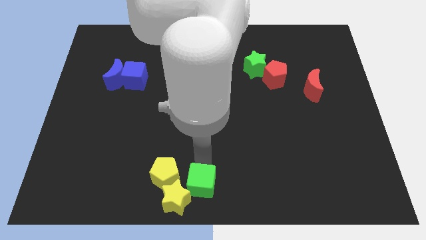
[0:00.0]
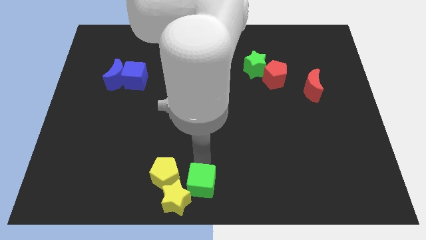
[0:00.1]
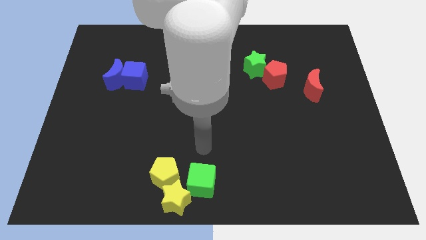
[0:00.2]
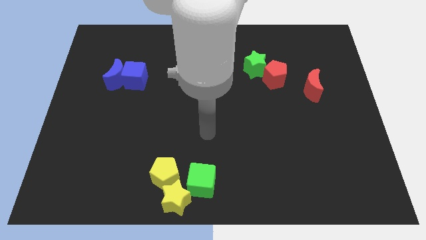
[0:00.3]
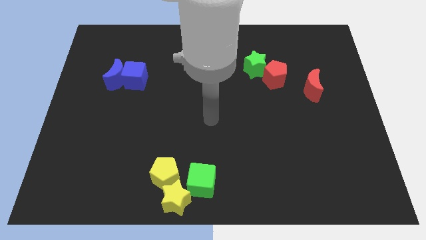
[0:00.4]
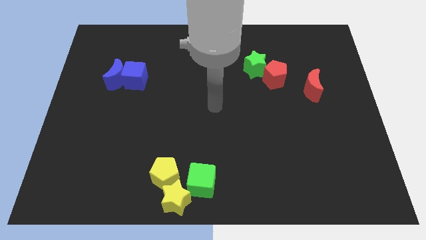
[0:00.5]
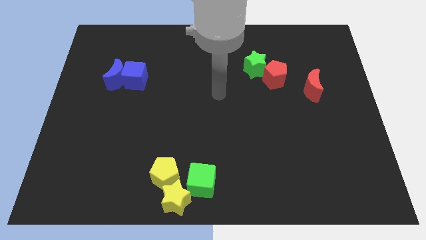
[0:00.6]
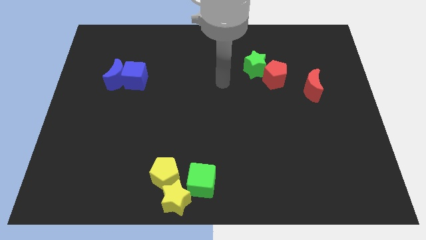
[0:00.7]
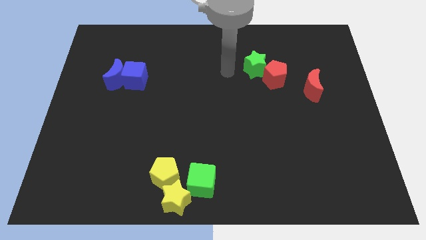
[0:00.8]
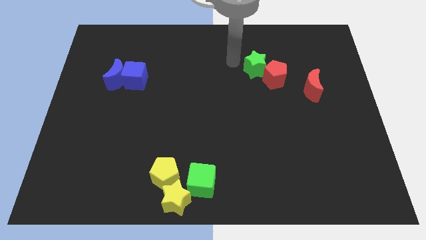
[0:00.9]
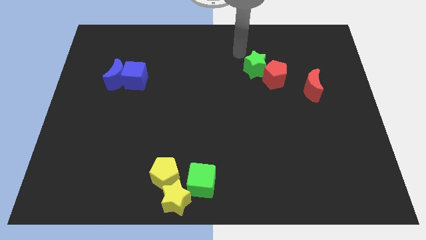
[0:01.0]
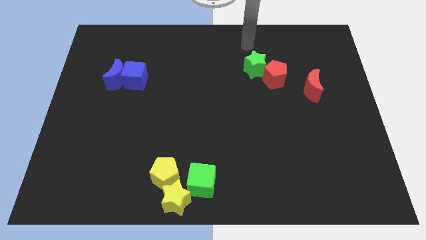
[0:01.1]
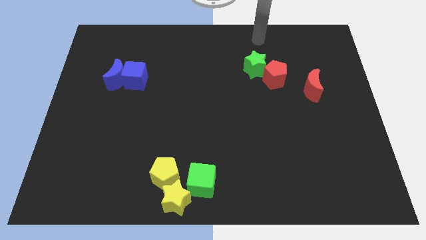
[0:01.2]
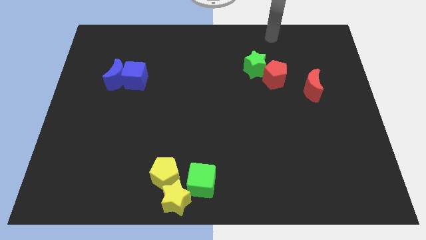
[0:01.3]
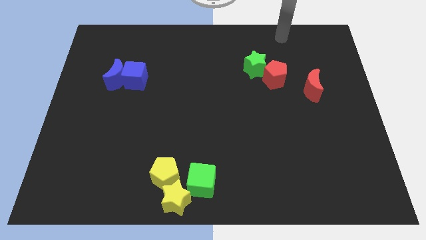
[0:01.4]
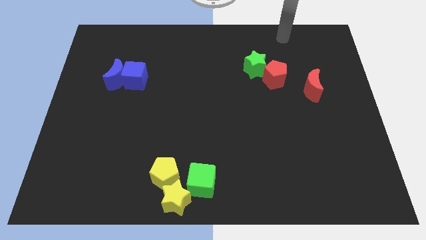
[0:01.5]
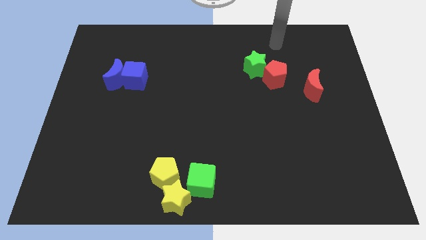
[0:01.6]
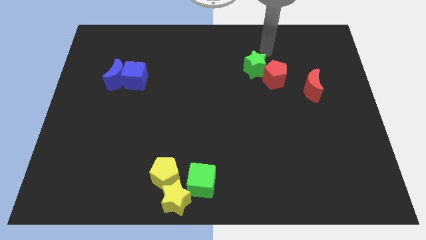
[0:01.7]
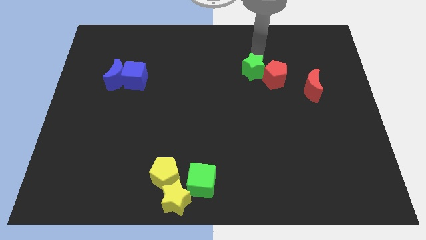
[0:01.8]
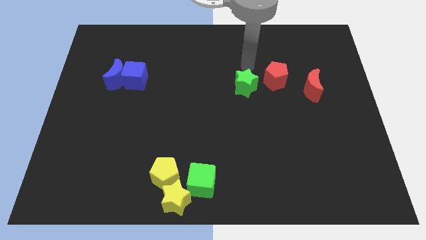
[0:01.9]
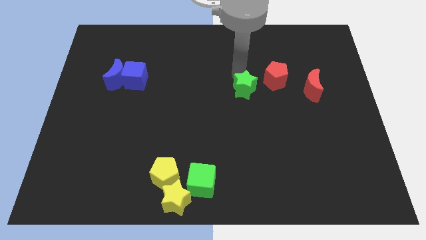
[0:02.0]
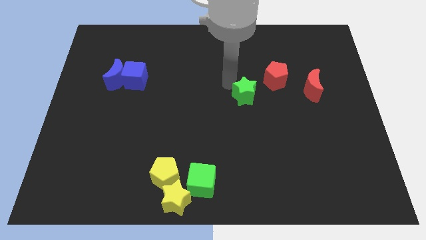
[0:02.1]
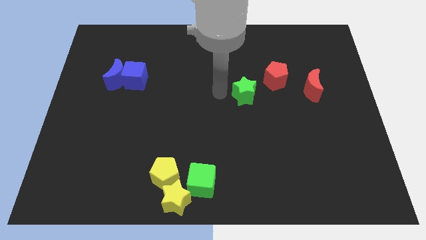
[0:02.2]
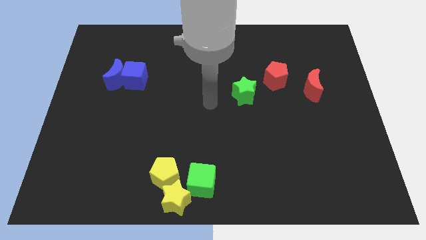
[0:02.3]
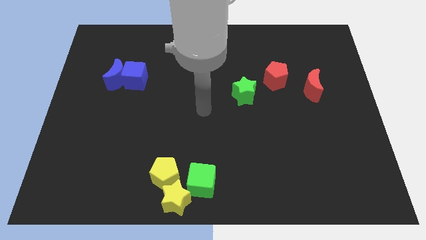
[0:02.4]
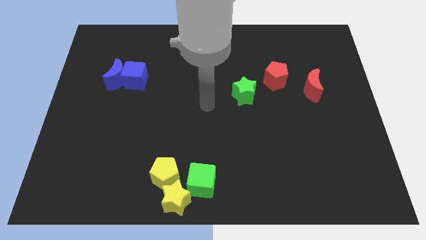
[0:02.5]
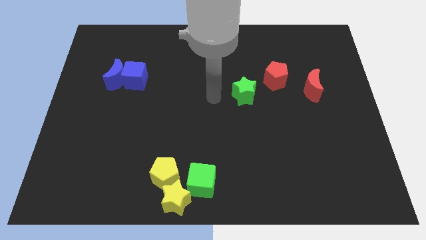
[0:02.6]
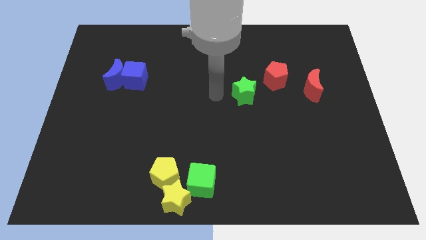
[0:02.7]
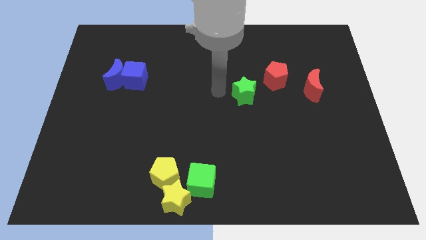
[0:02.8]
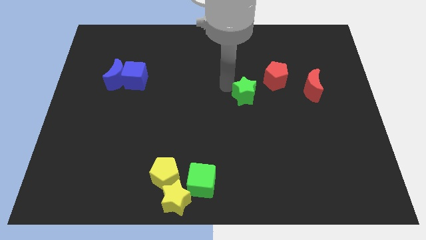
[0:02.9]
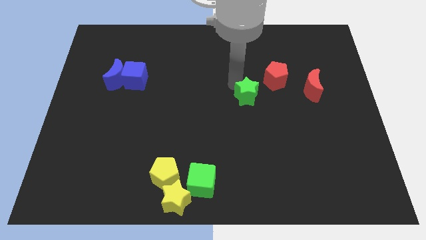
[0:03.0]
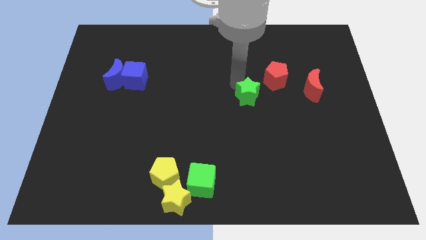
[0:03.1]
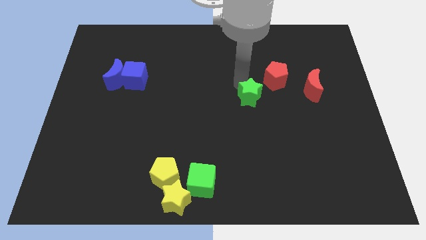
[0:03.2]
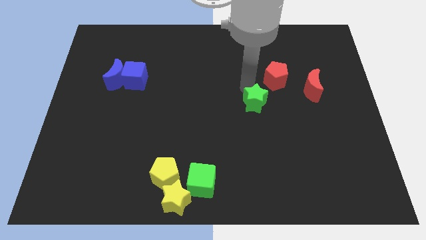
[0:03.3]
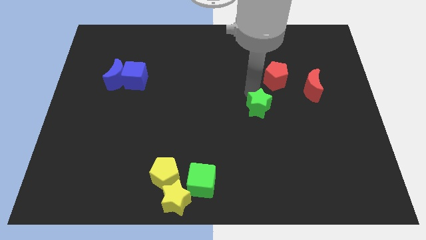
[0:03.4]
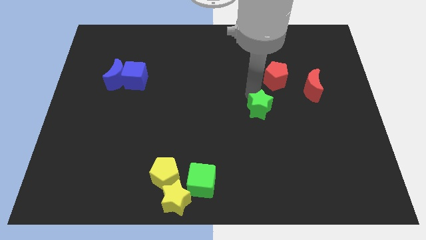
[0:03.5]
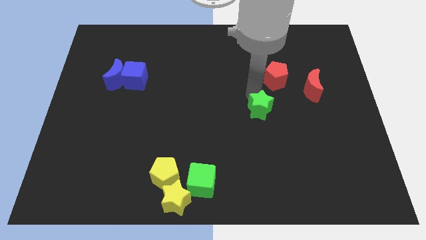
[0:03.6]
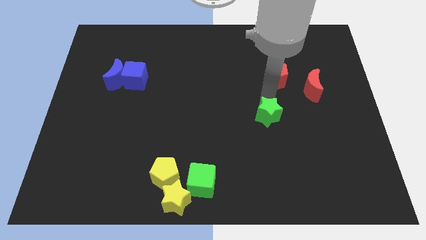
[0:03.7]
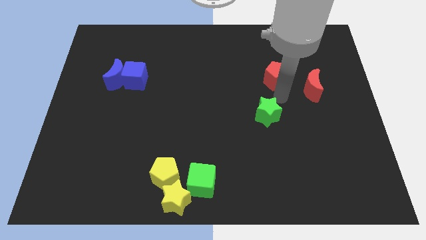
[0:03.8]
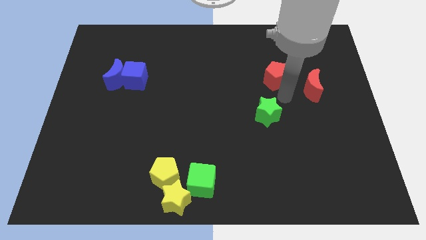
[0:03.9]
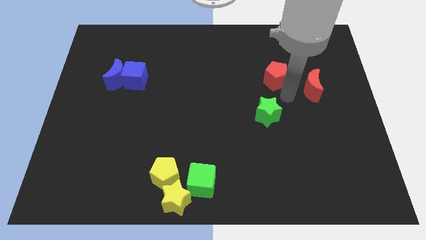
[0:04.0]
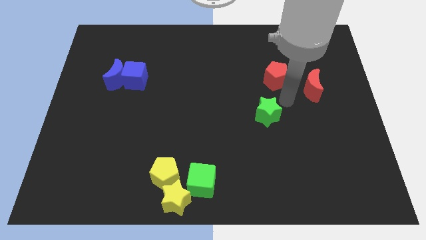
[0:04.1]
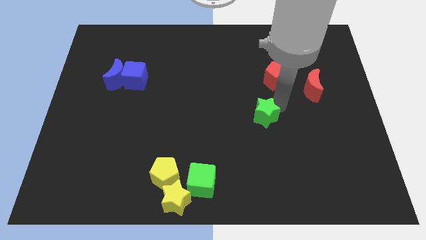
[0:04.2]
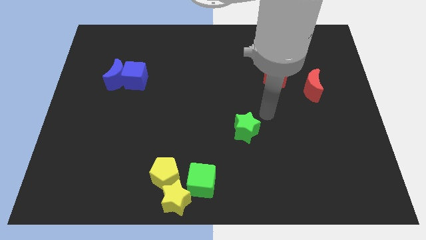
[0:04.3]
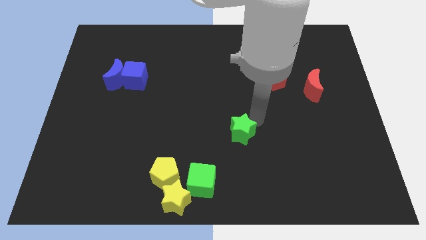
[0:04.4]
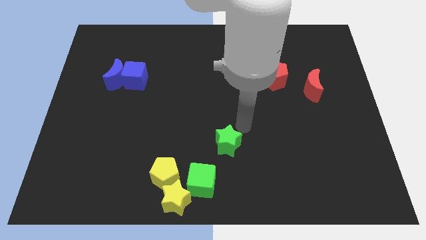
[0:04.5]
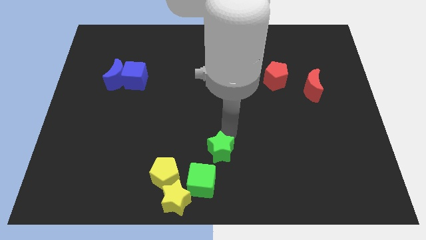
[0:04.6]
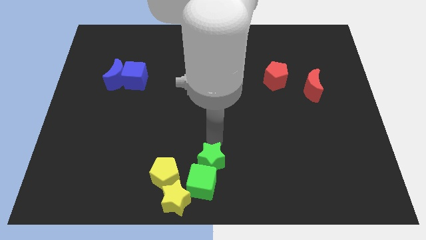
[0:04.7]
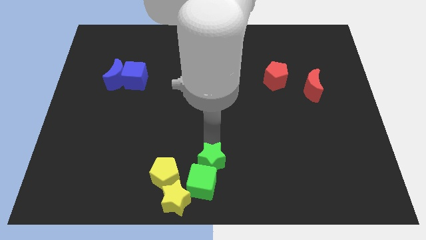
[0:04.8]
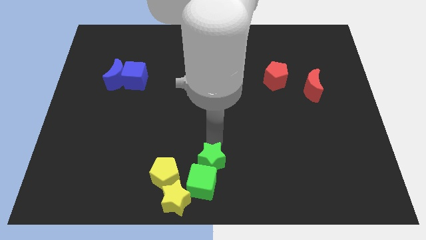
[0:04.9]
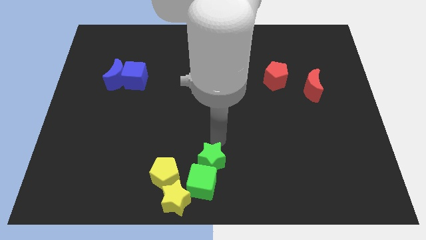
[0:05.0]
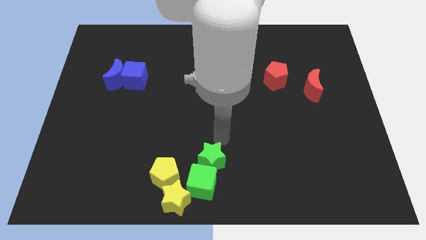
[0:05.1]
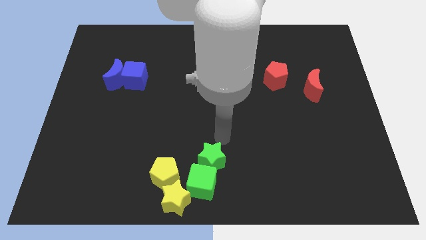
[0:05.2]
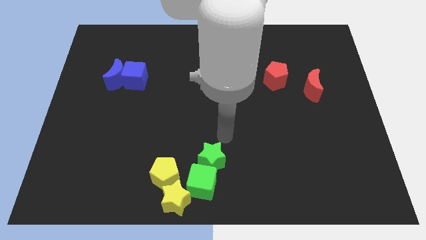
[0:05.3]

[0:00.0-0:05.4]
push the green star into green cube

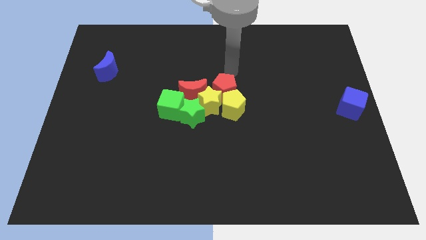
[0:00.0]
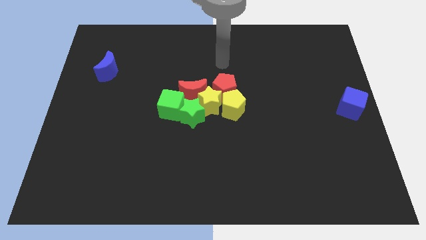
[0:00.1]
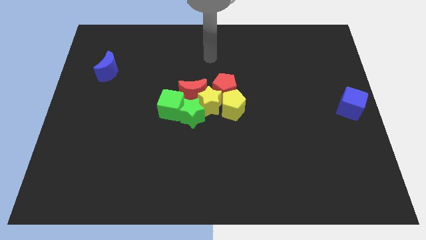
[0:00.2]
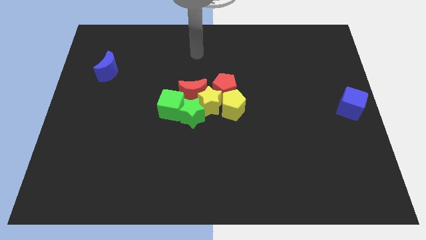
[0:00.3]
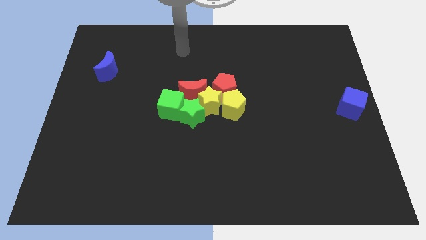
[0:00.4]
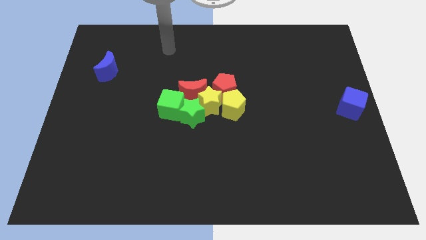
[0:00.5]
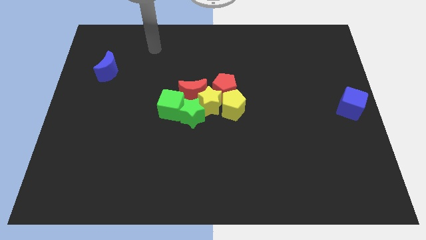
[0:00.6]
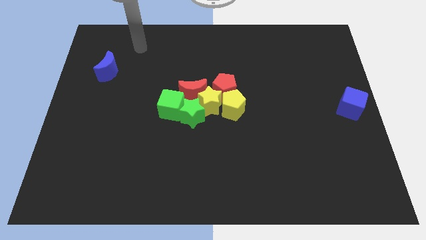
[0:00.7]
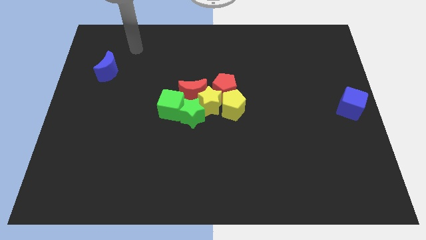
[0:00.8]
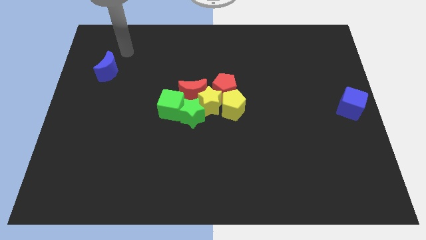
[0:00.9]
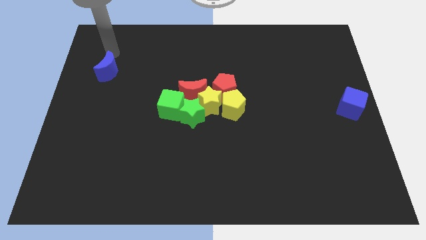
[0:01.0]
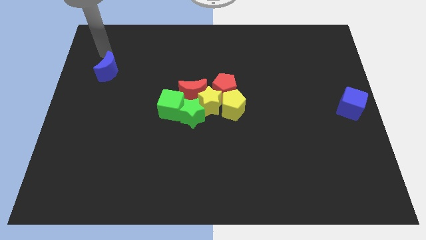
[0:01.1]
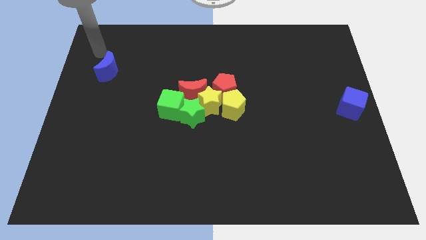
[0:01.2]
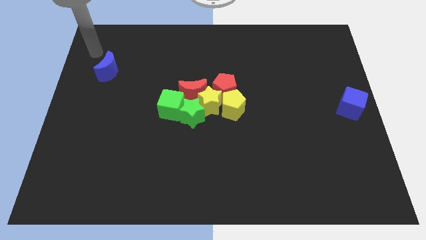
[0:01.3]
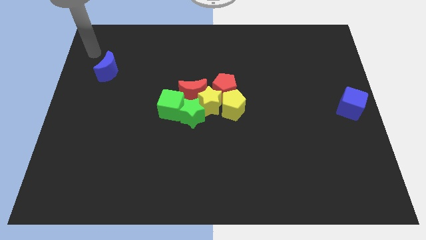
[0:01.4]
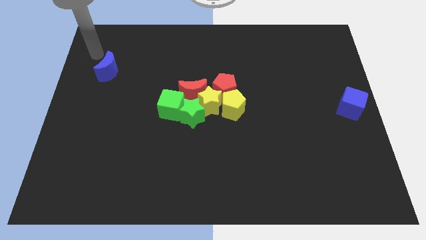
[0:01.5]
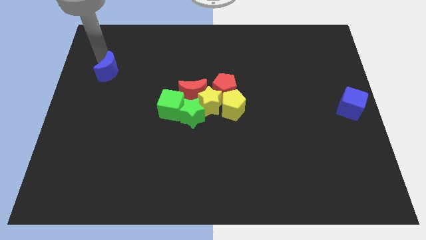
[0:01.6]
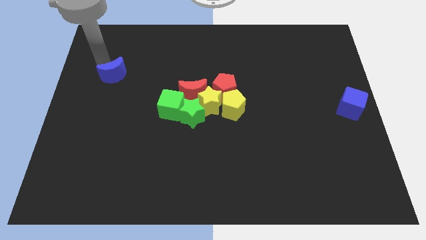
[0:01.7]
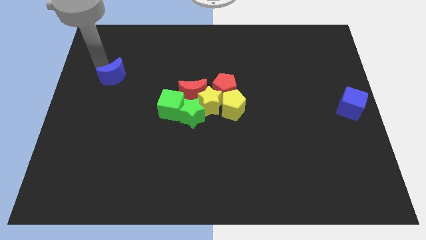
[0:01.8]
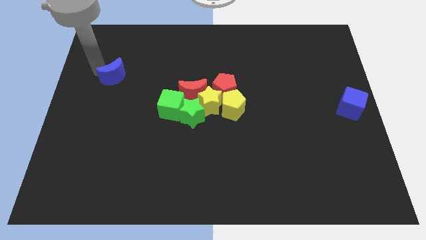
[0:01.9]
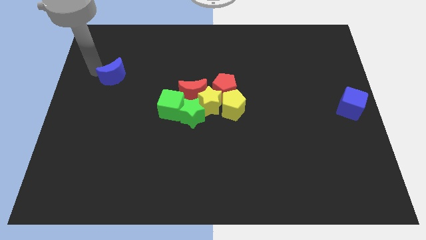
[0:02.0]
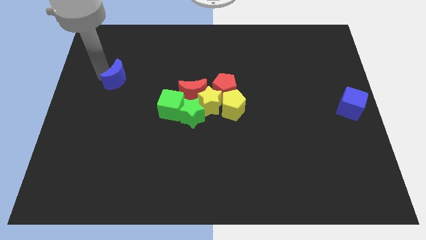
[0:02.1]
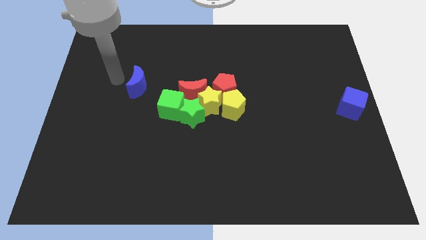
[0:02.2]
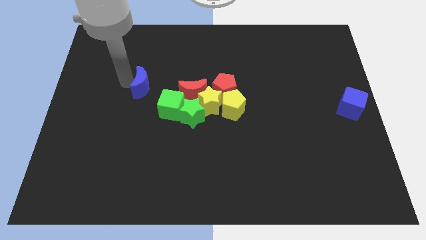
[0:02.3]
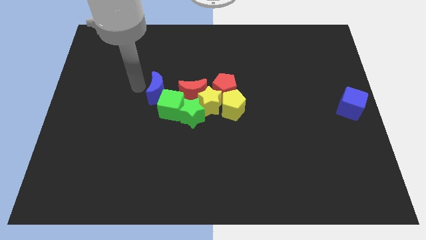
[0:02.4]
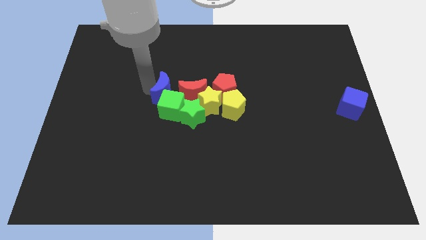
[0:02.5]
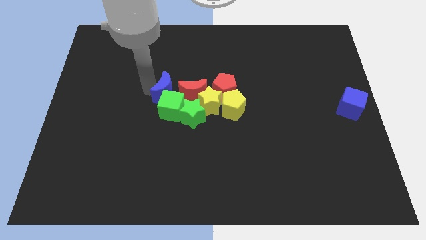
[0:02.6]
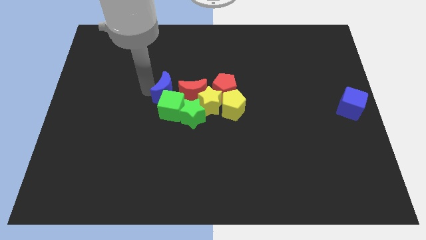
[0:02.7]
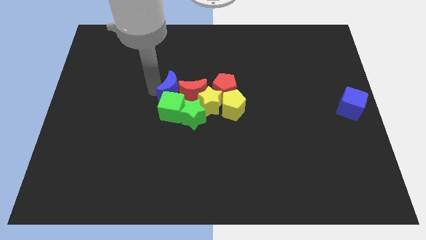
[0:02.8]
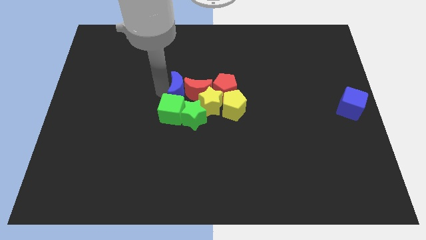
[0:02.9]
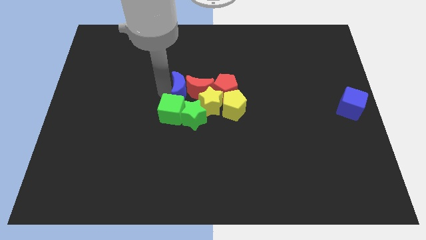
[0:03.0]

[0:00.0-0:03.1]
push blue moon into group of blocks

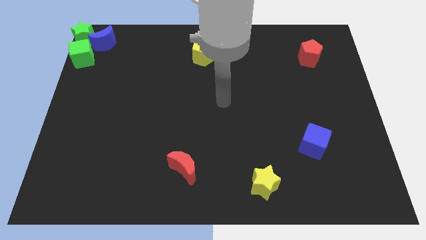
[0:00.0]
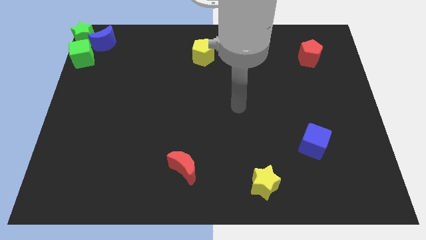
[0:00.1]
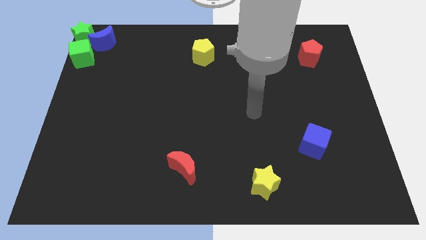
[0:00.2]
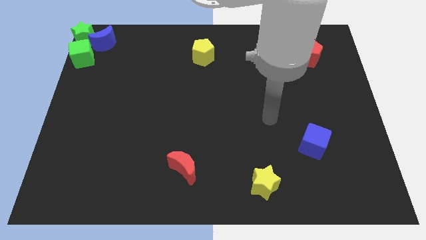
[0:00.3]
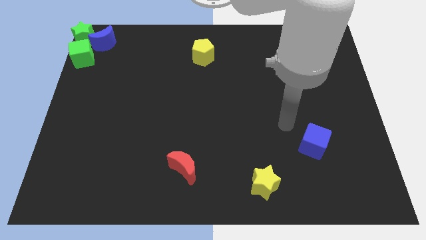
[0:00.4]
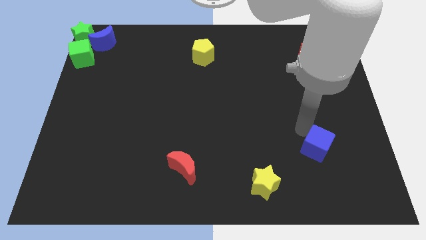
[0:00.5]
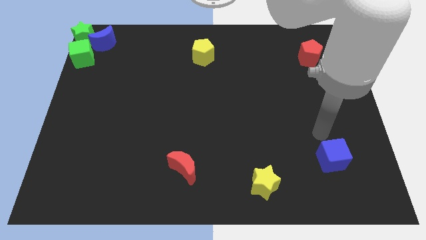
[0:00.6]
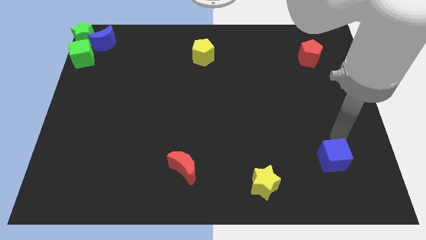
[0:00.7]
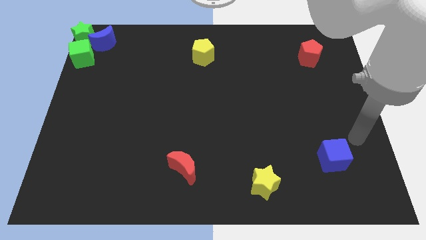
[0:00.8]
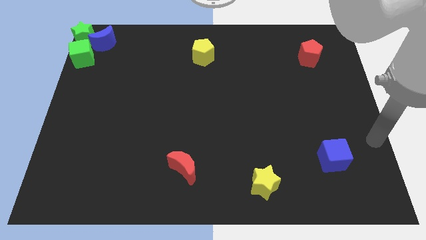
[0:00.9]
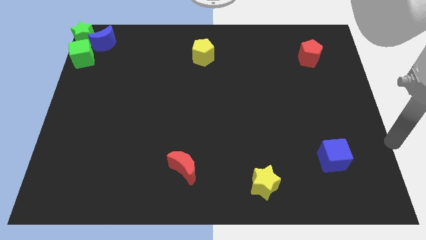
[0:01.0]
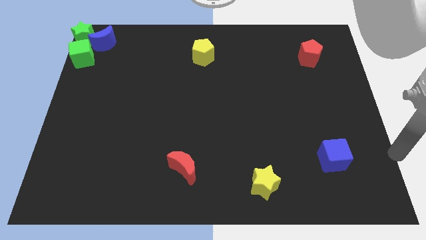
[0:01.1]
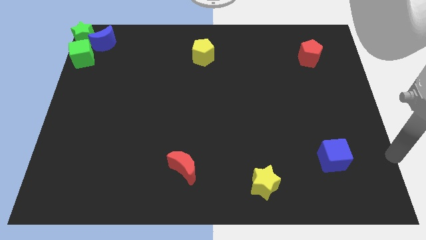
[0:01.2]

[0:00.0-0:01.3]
touch the blue cube
